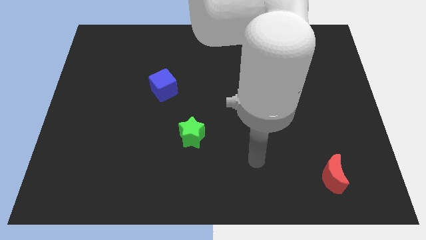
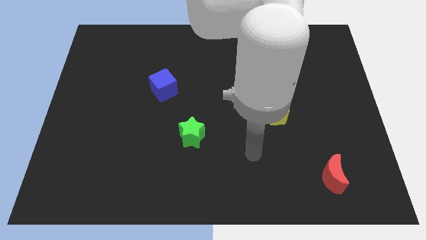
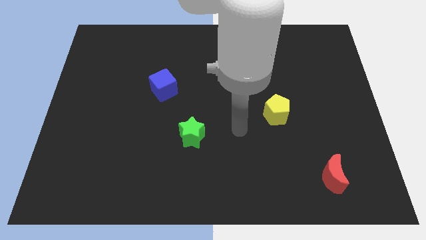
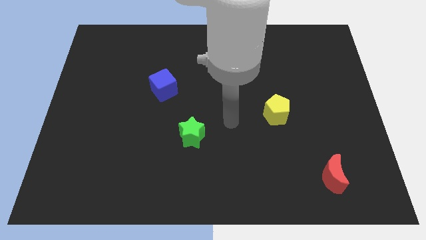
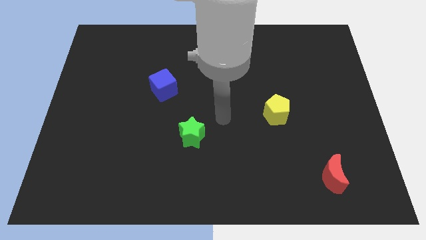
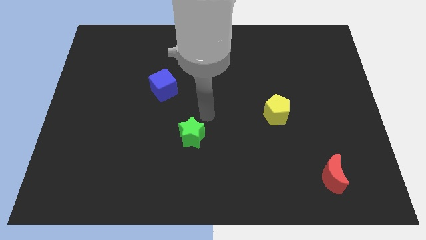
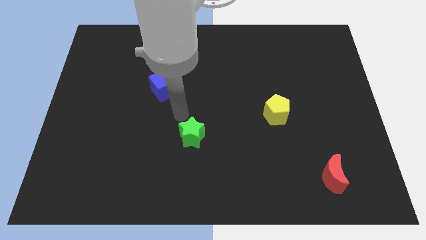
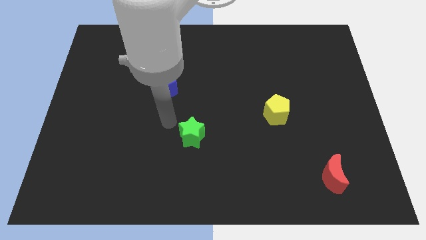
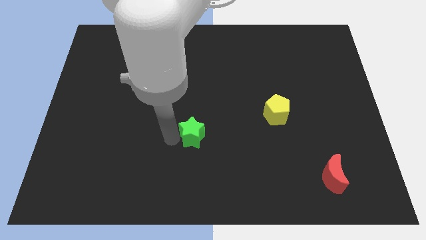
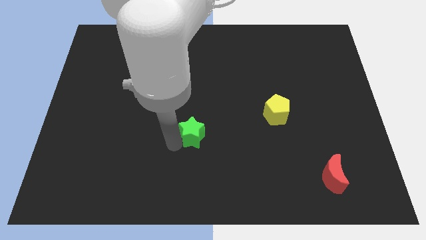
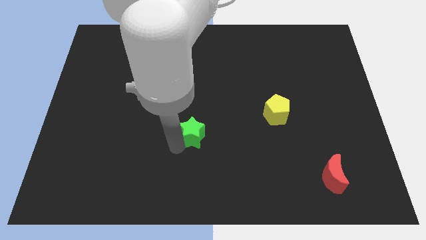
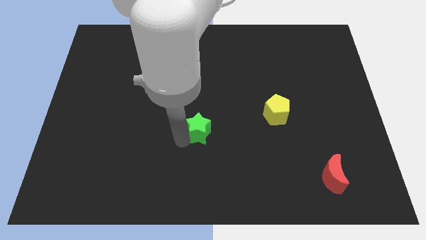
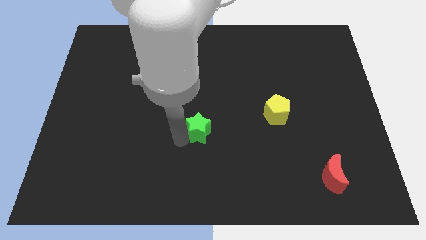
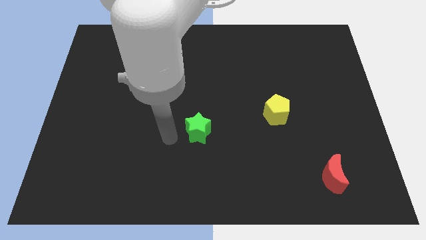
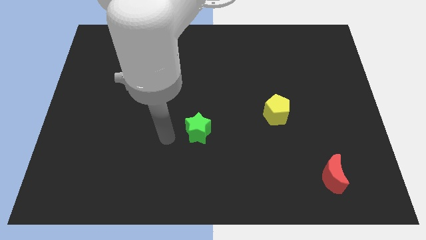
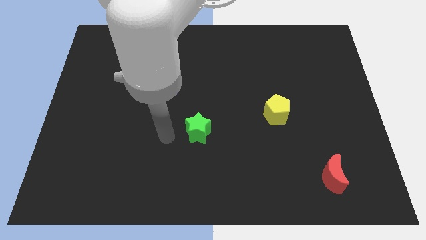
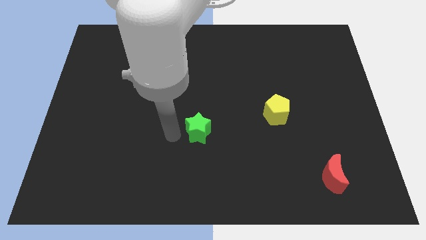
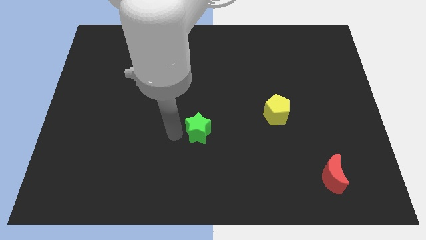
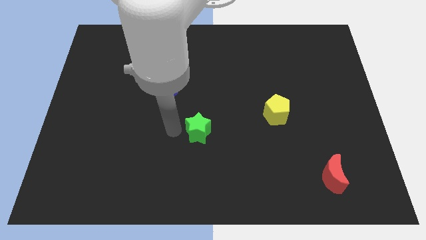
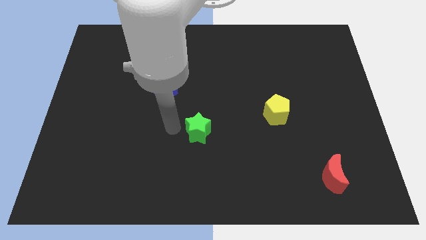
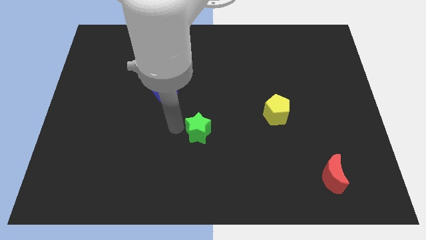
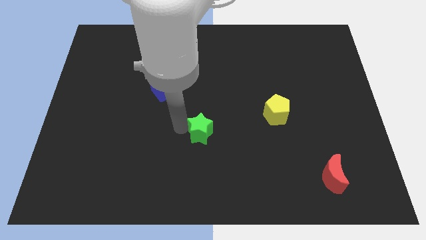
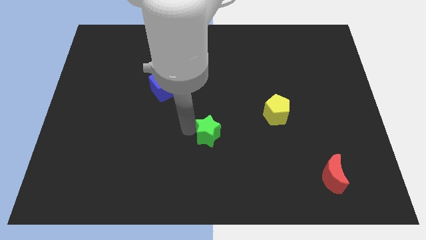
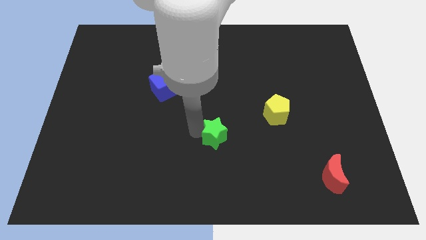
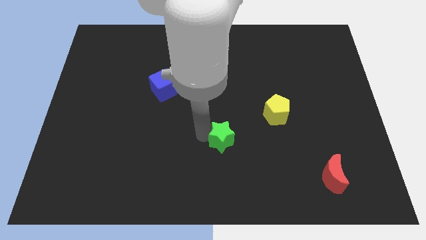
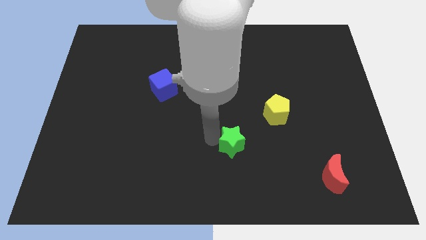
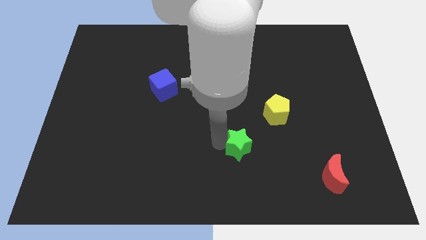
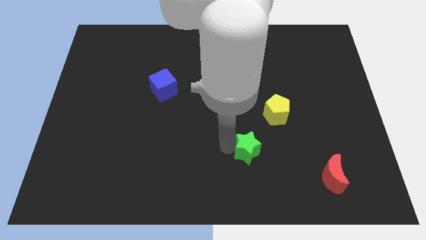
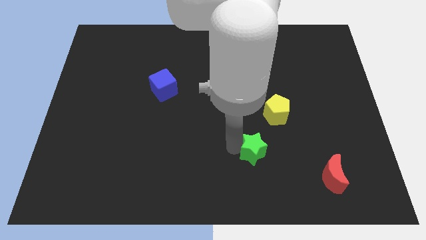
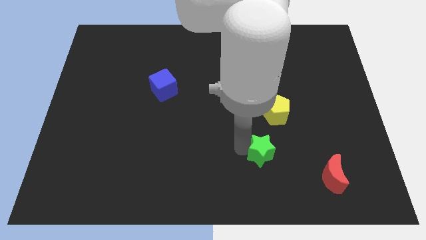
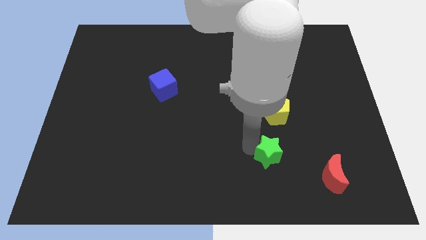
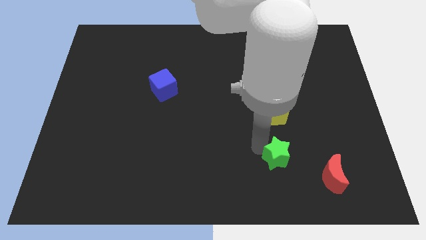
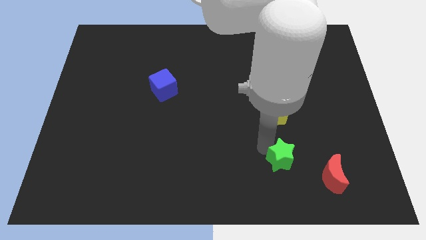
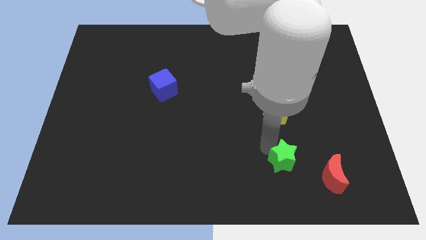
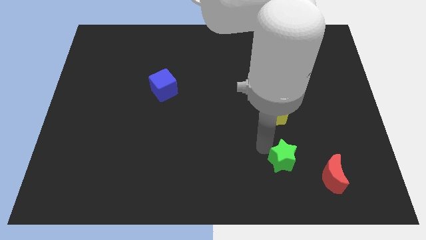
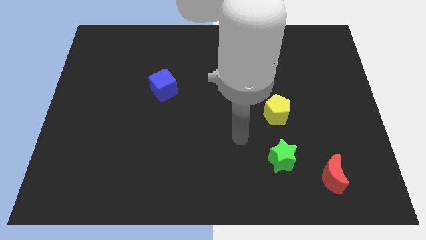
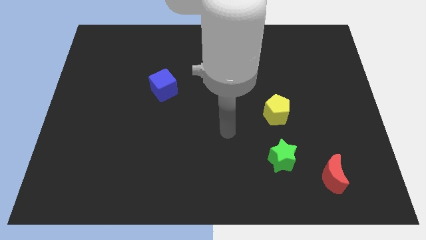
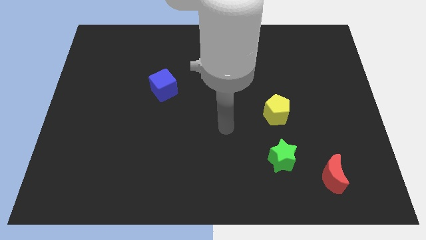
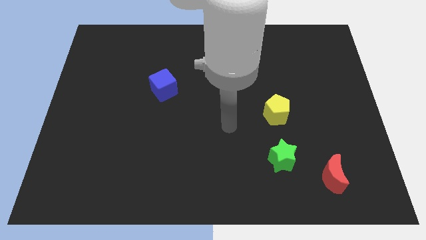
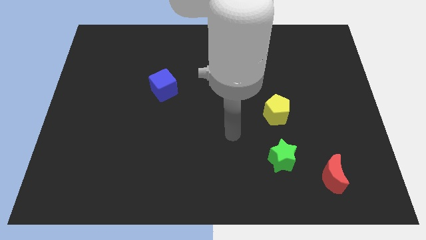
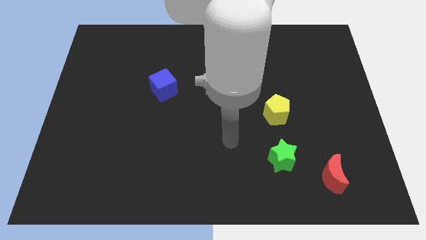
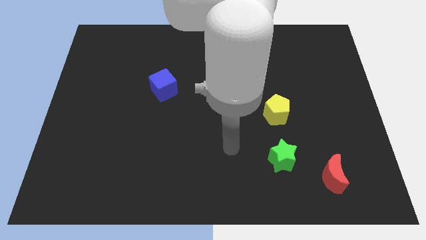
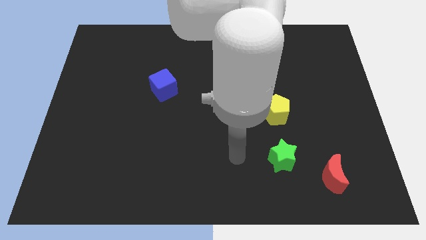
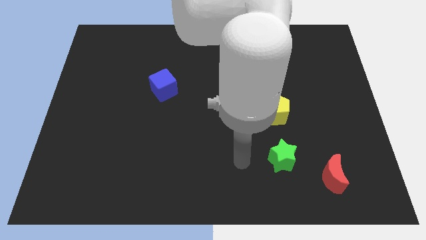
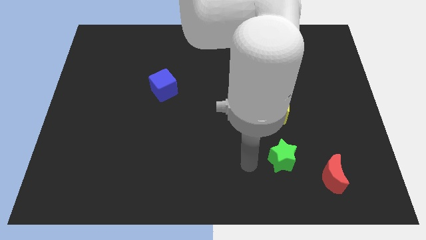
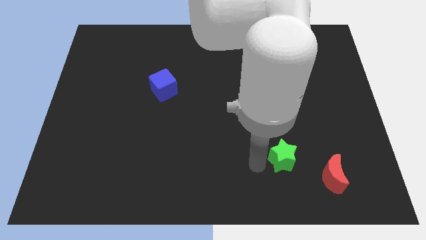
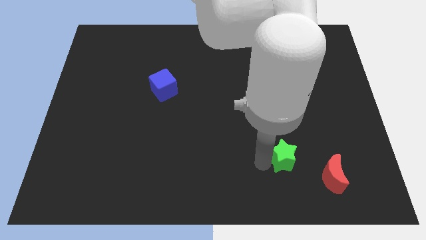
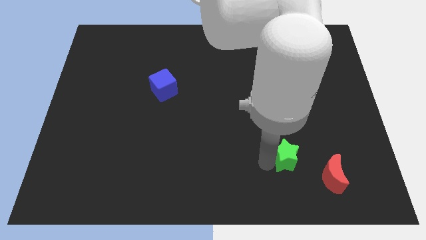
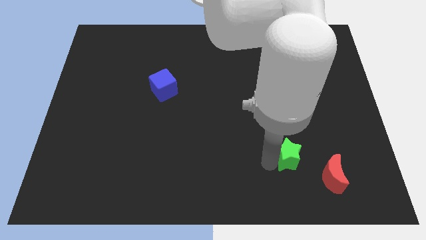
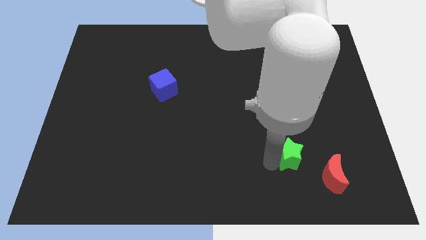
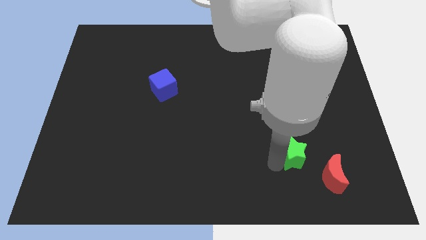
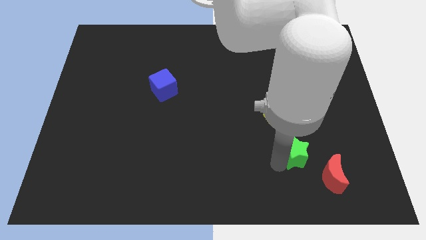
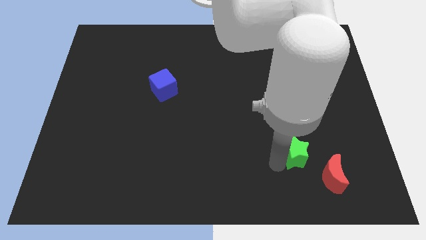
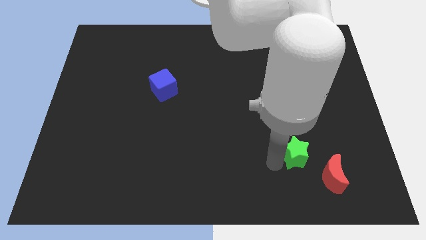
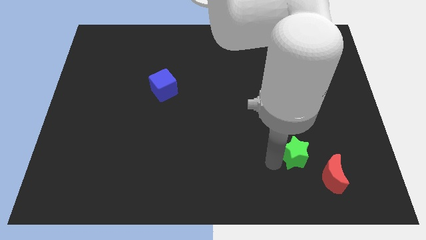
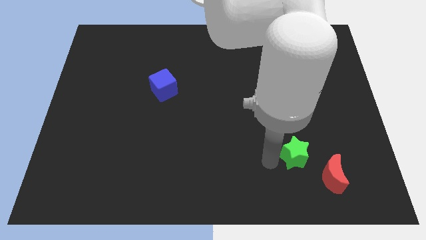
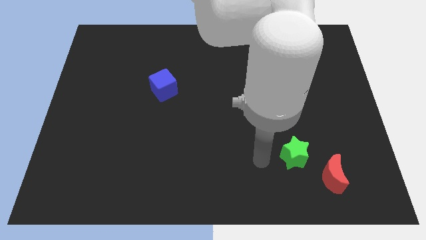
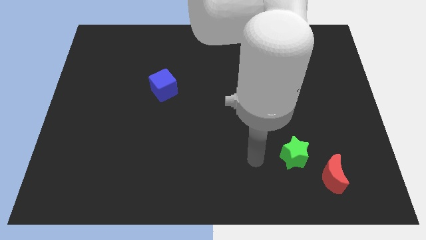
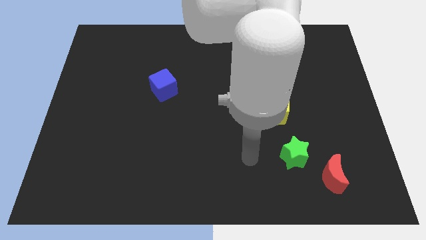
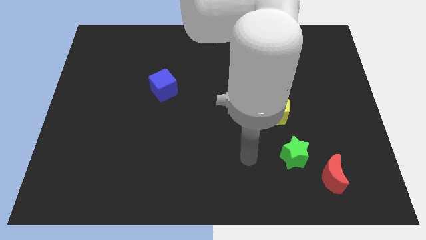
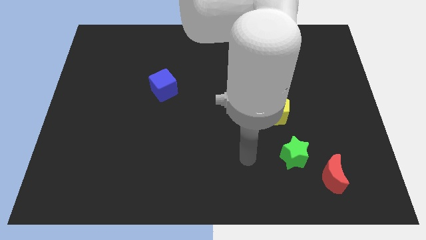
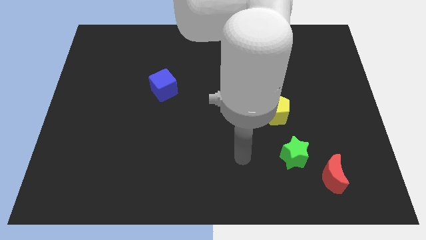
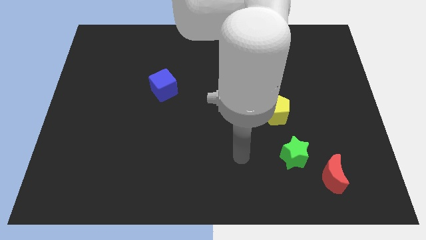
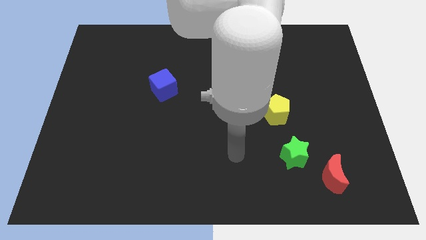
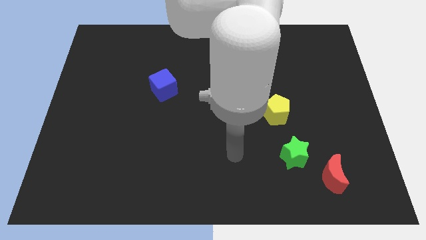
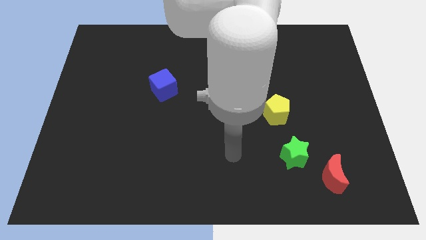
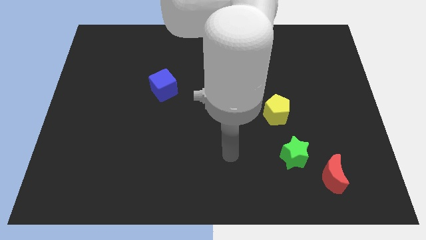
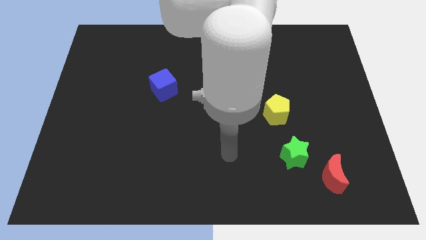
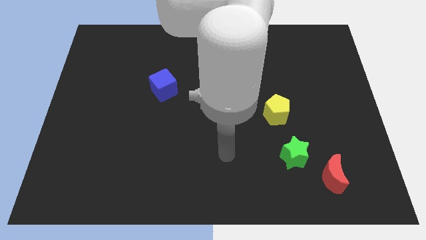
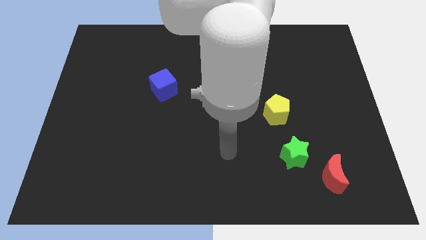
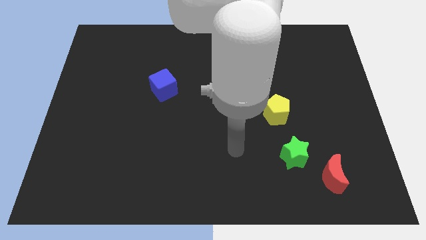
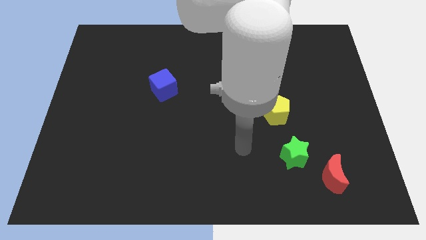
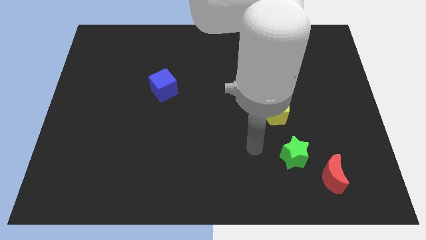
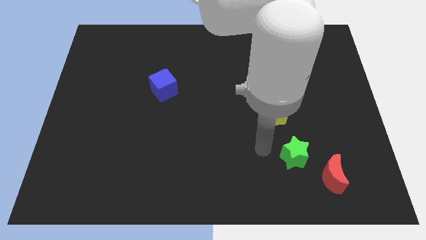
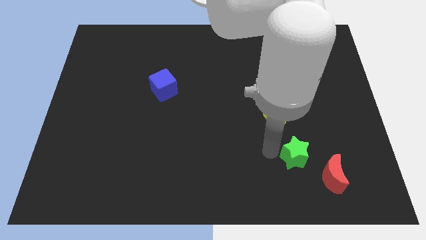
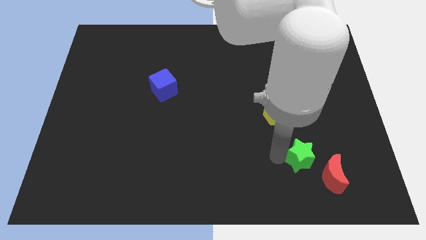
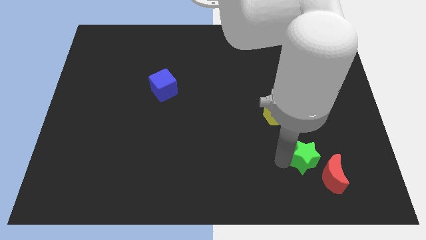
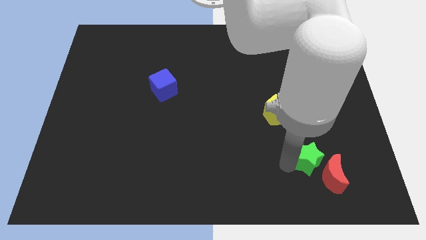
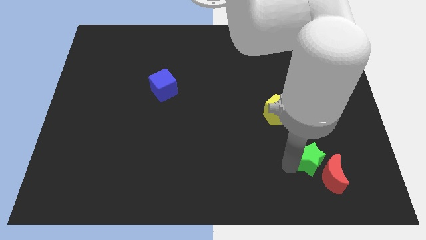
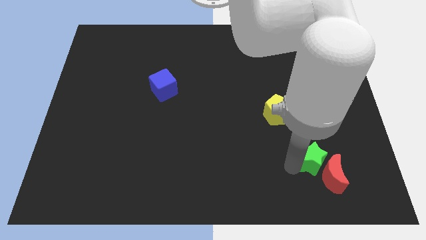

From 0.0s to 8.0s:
put the star close to the moon

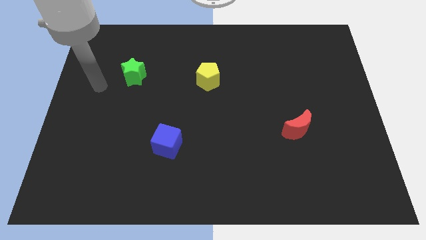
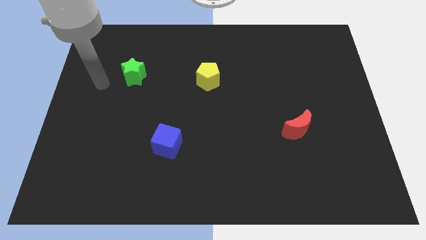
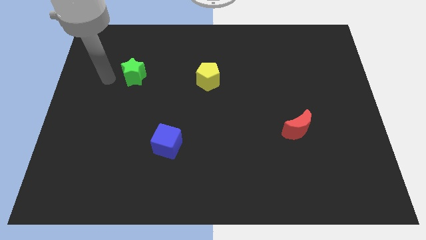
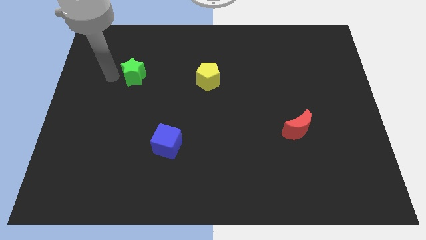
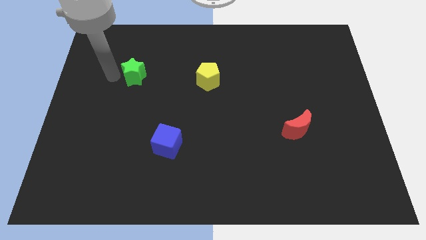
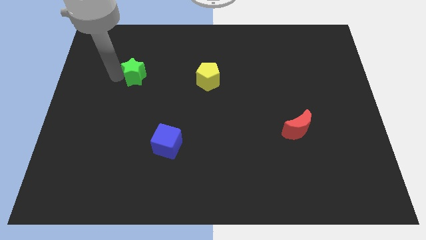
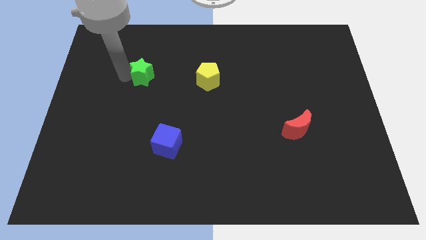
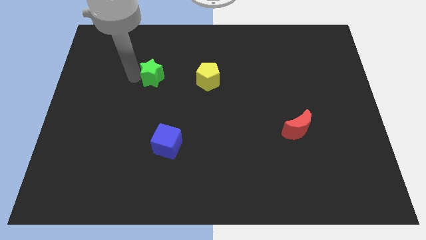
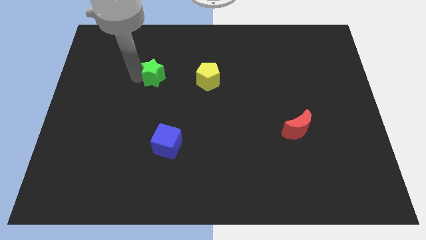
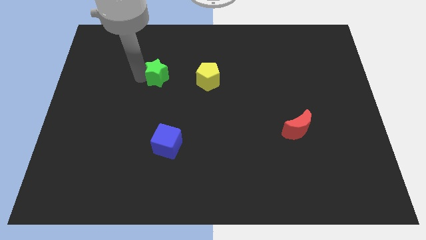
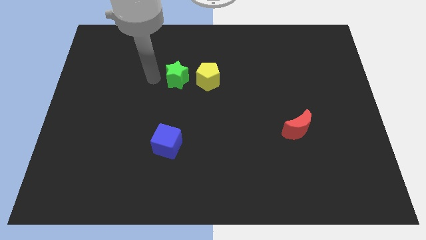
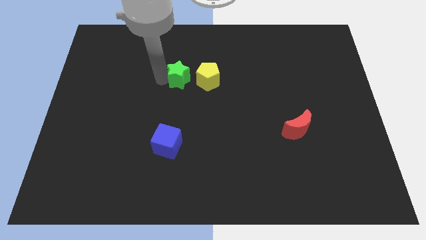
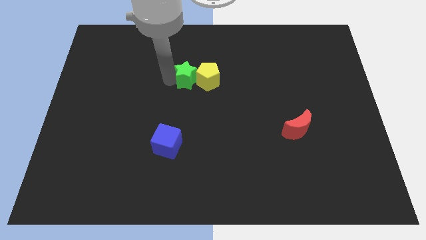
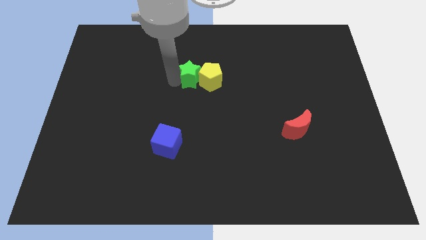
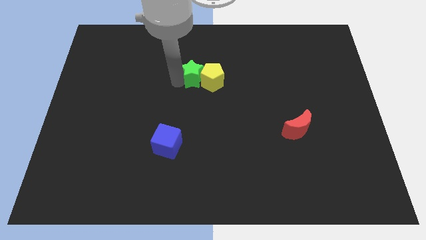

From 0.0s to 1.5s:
move the green block close to the pentagon
